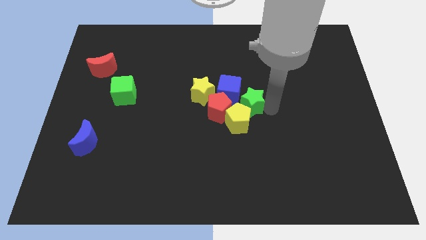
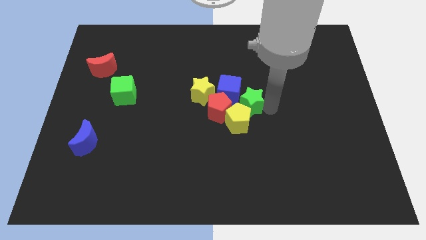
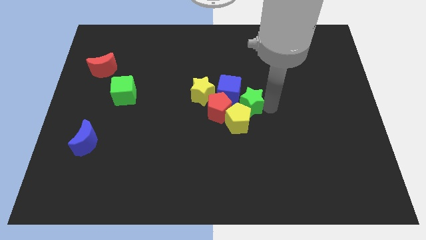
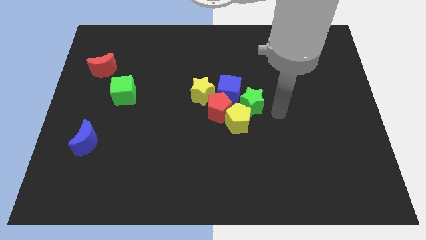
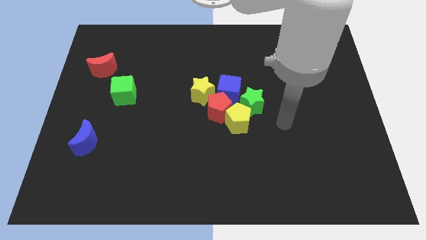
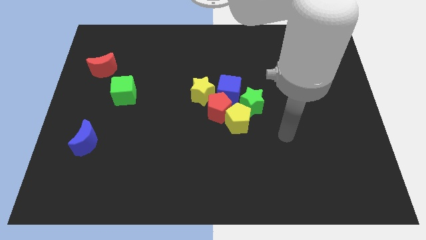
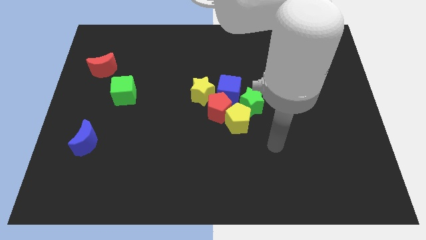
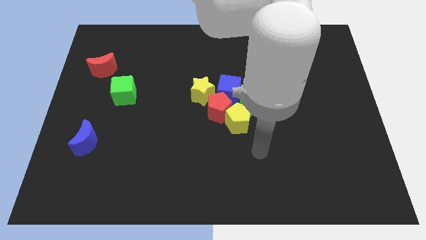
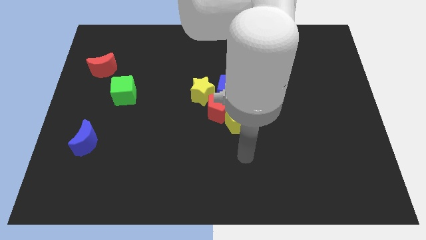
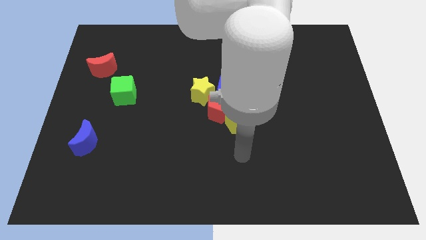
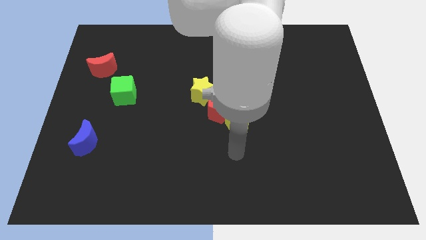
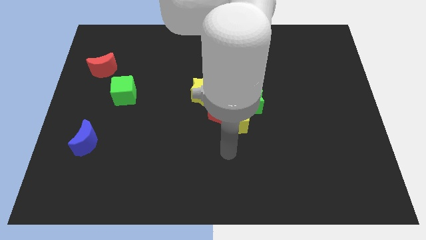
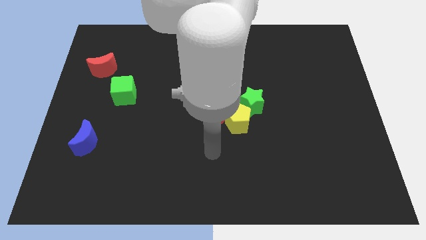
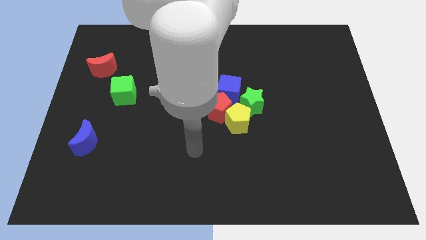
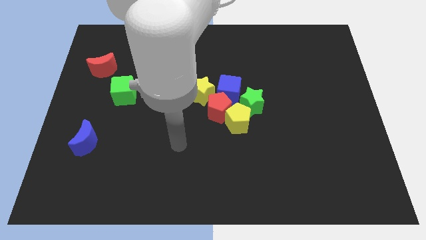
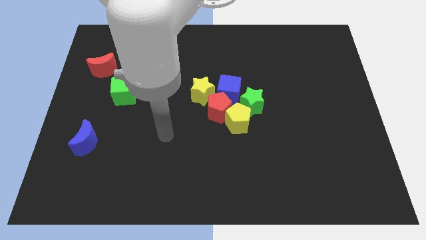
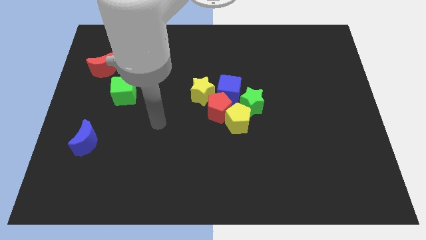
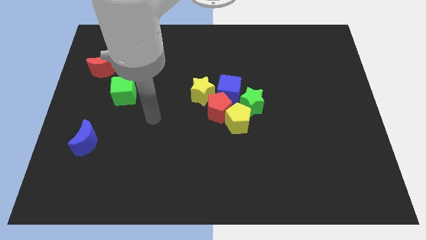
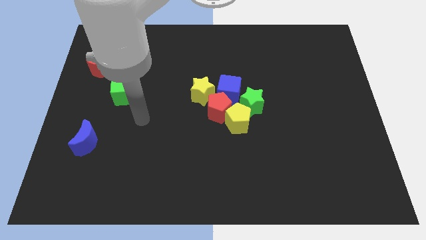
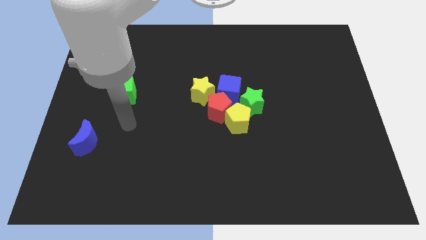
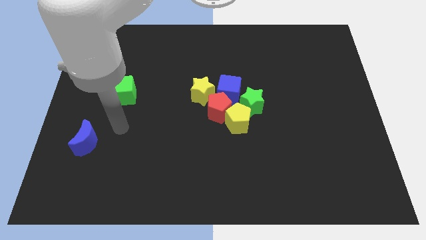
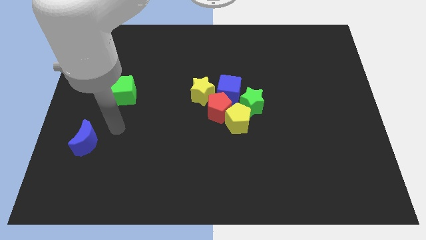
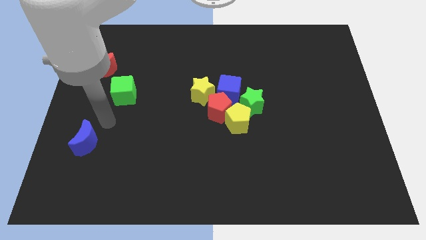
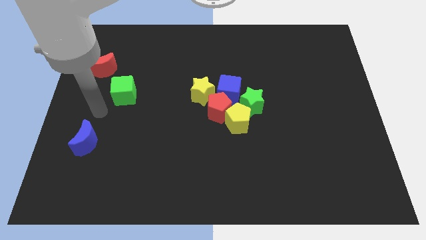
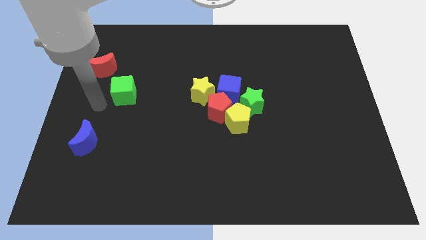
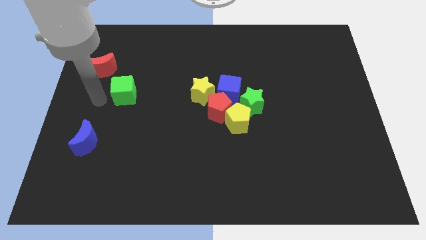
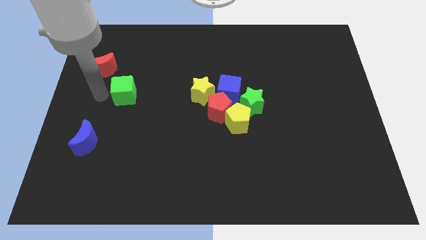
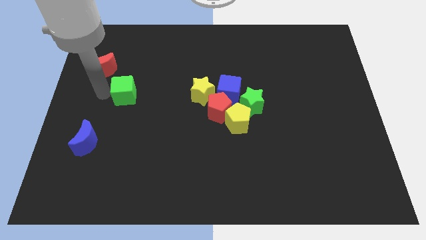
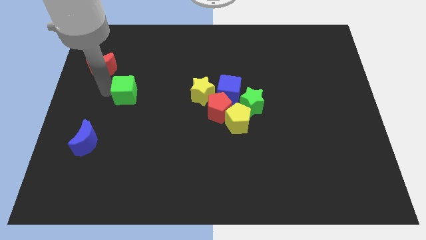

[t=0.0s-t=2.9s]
move your arm away from green star

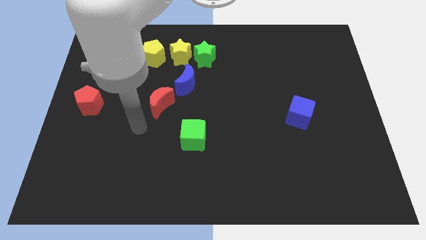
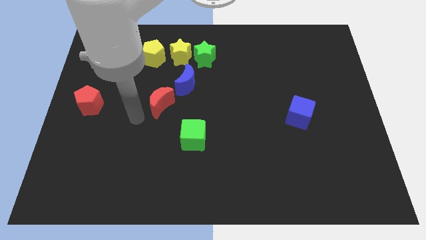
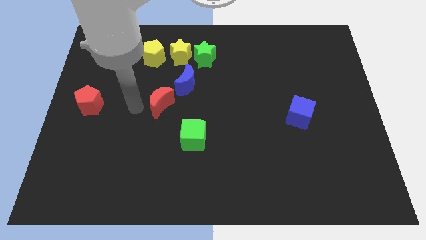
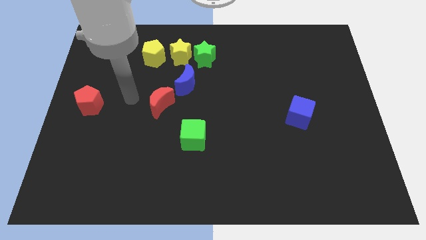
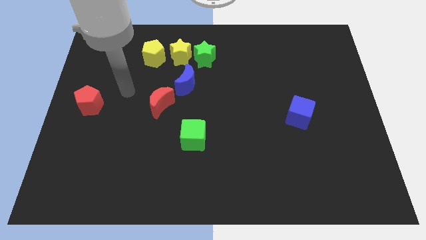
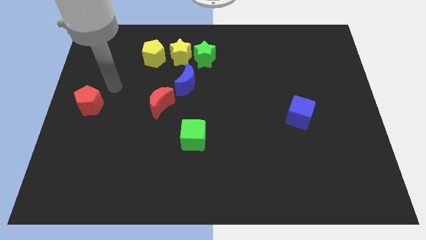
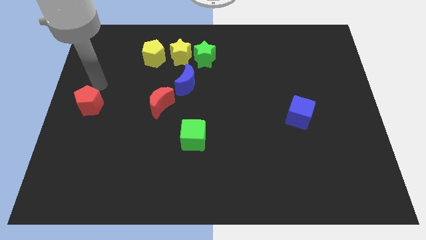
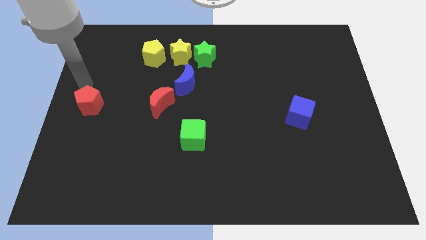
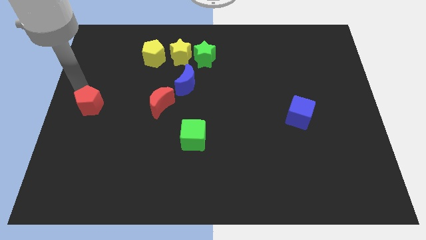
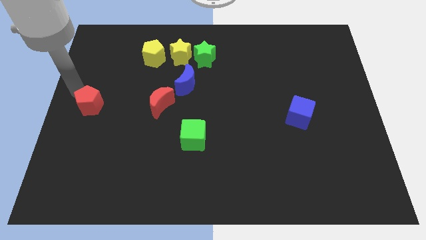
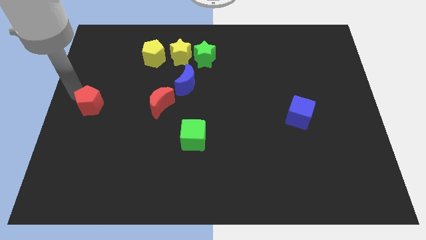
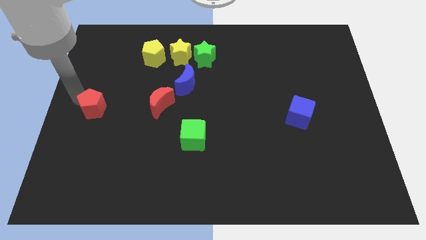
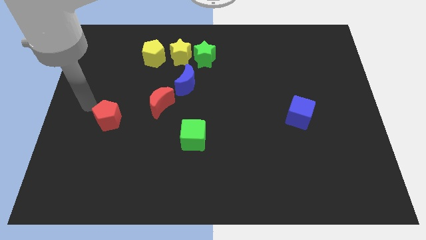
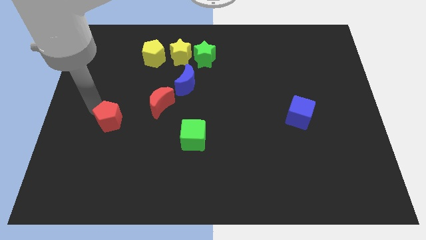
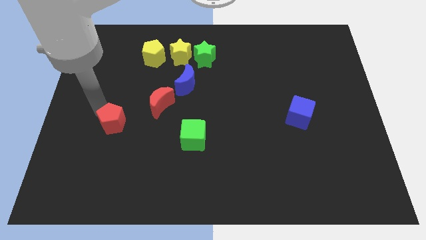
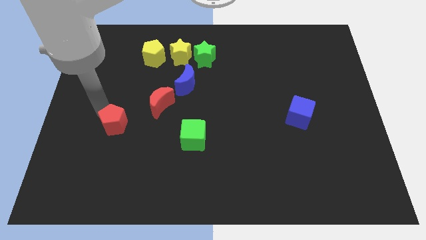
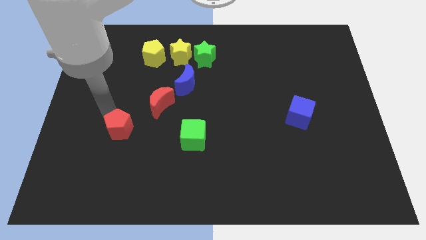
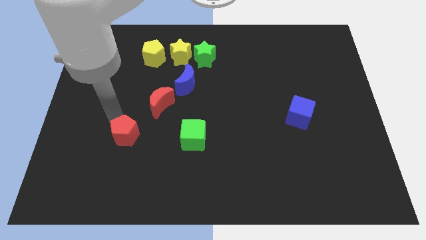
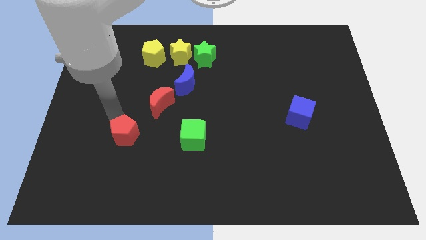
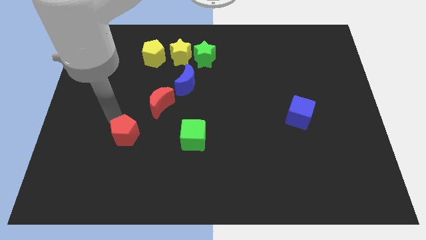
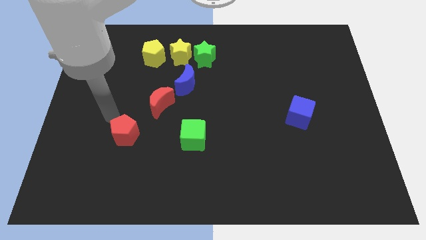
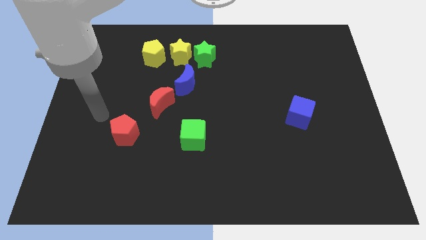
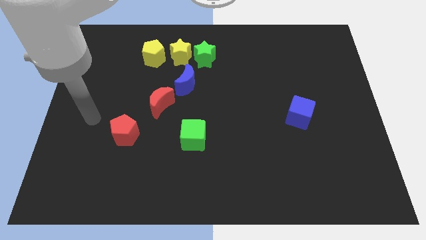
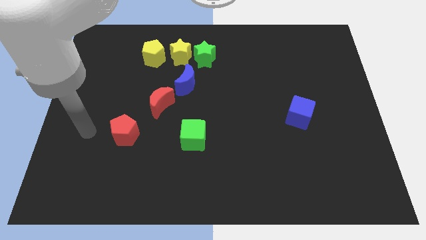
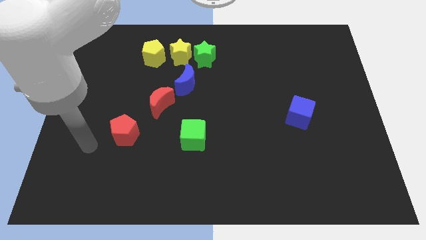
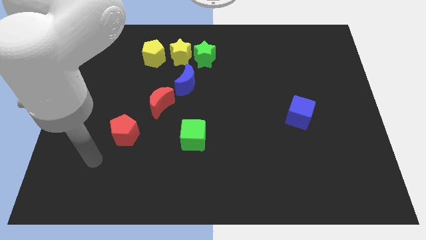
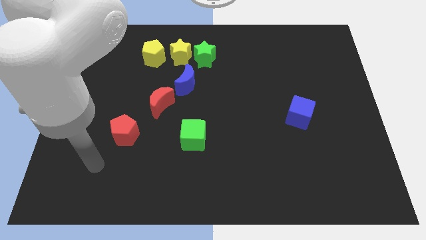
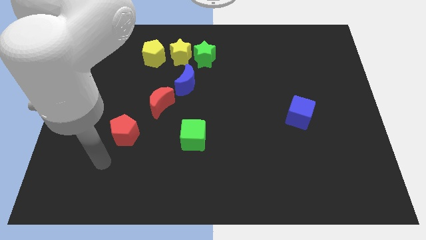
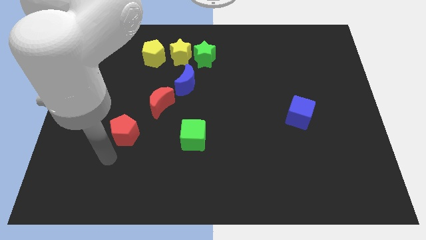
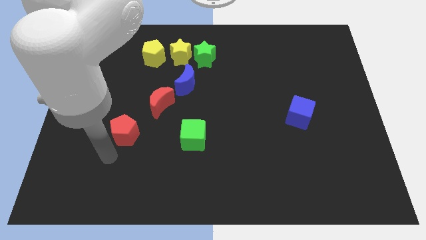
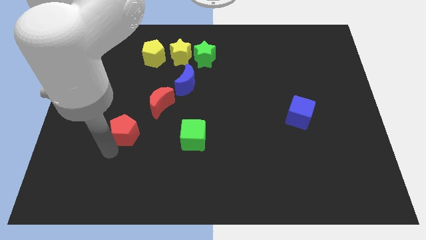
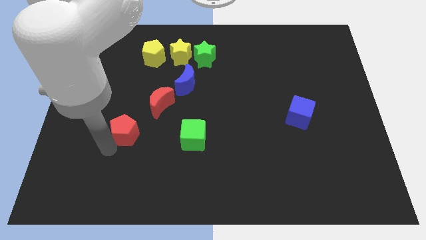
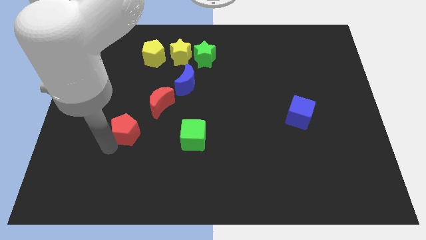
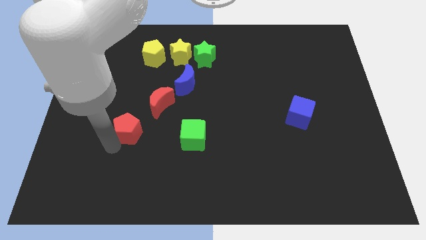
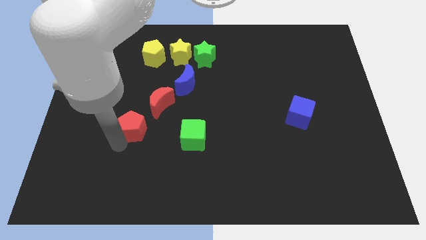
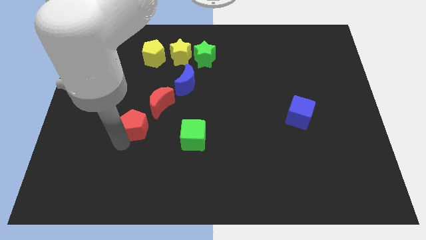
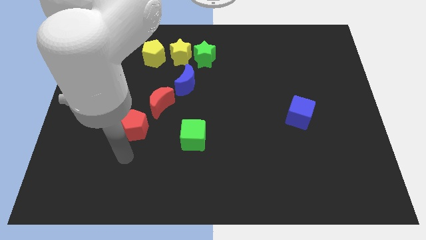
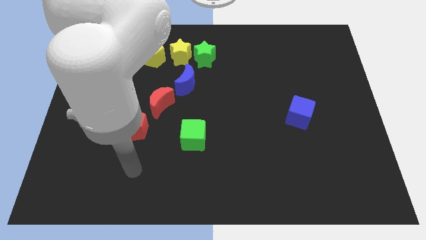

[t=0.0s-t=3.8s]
move the red pentagon to the bottom left side of the red moon

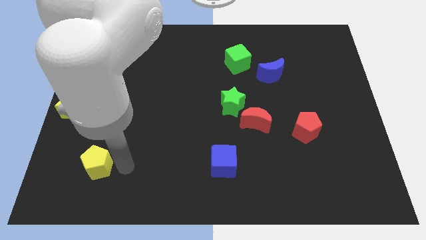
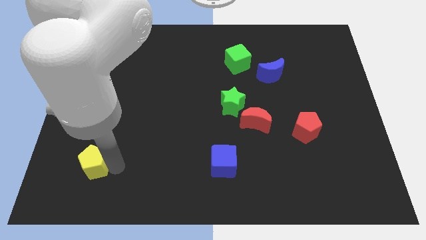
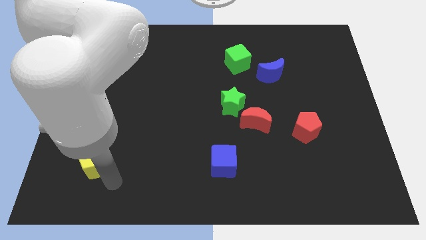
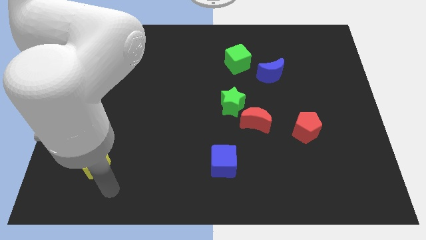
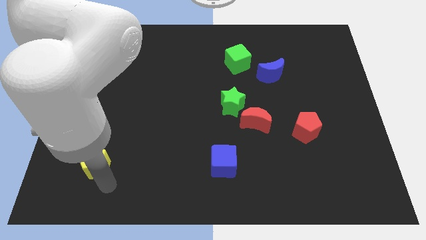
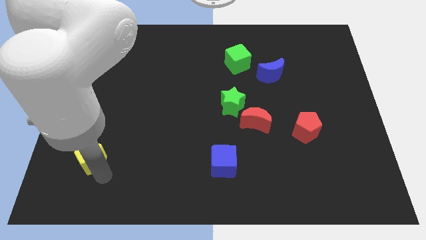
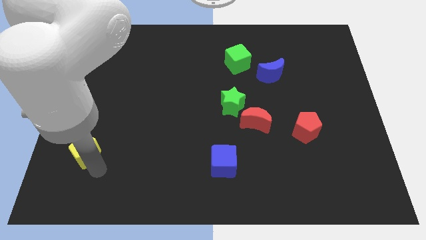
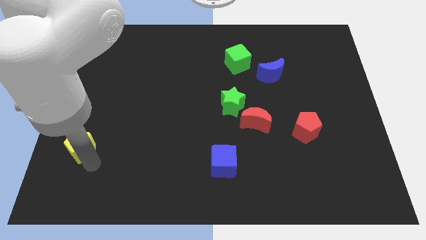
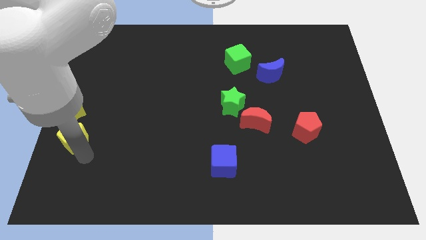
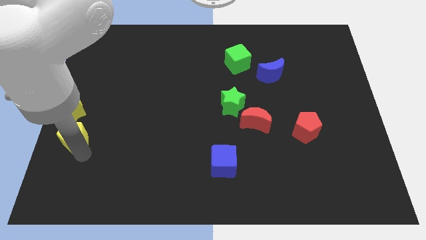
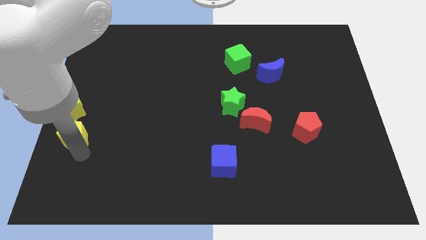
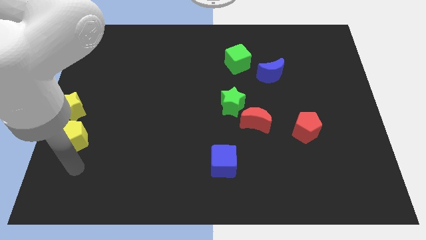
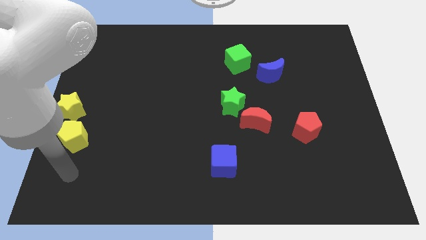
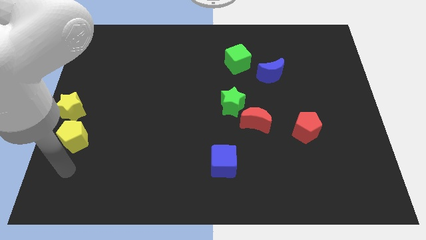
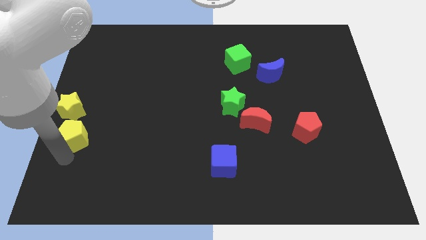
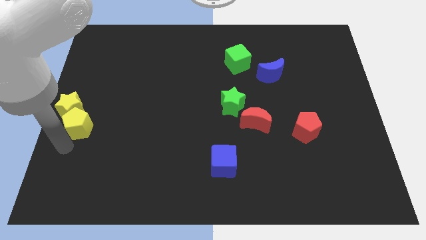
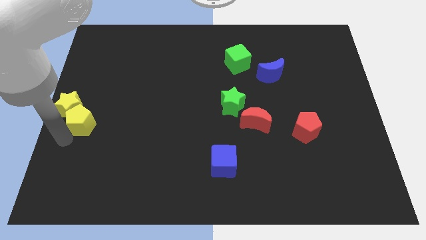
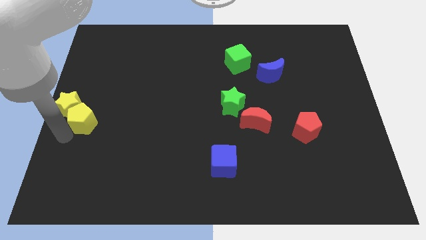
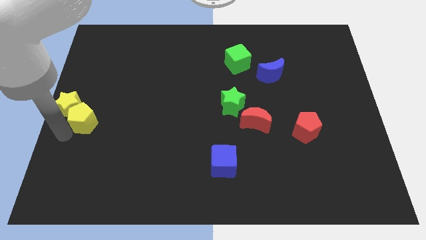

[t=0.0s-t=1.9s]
slide the yellow pentagon into the yellow star

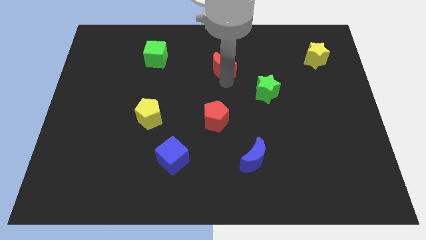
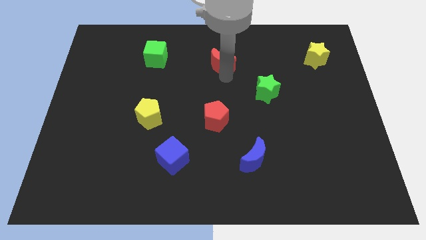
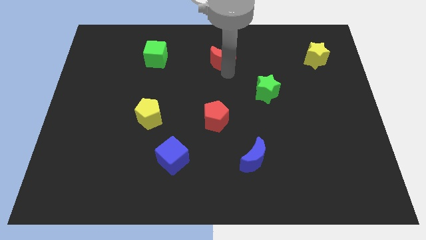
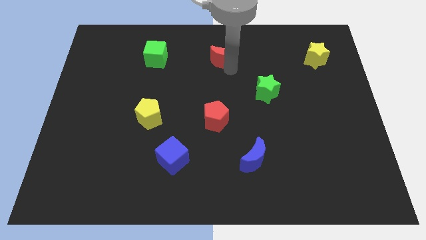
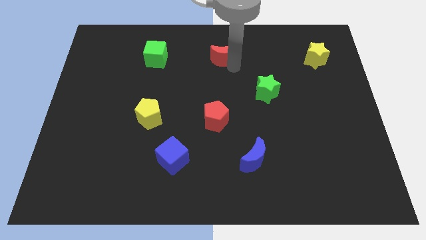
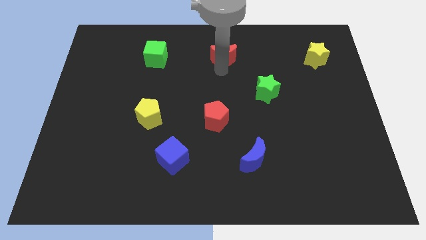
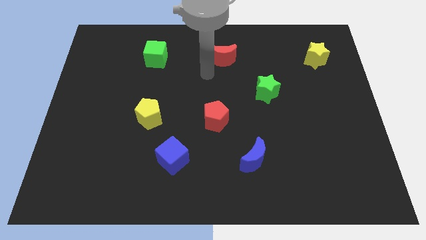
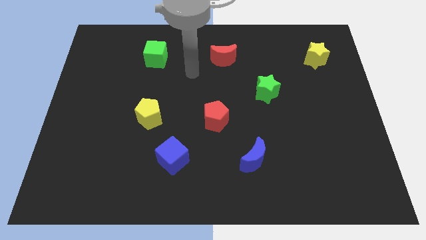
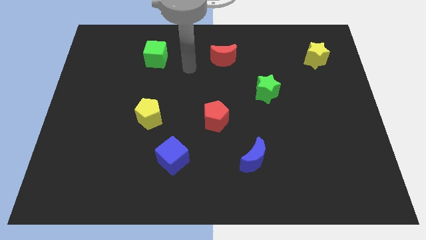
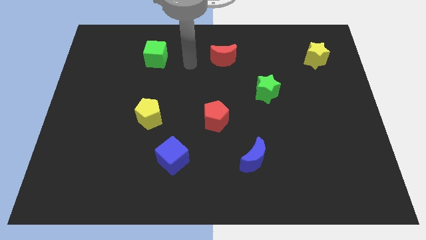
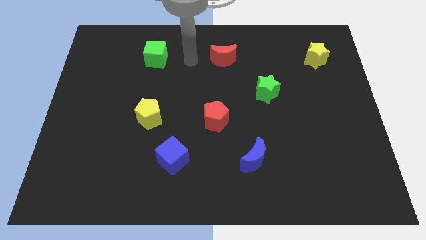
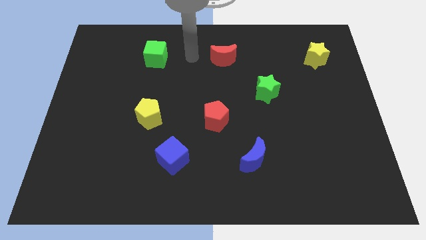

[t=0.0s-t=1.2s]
place arm in between red moon and green cube
